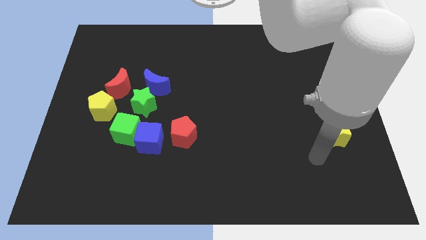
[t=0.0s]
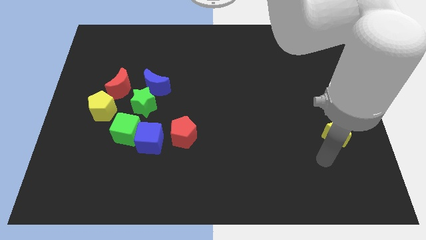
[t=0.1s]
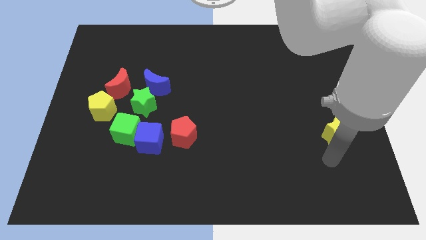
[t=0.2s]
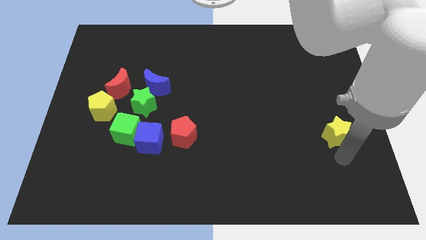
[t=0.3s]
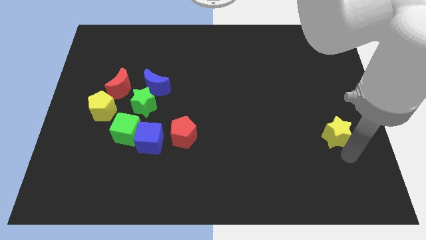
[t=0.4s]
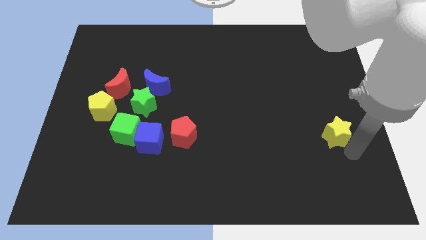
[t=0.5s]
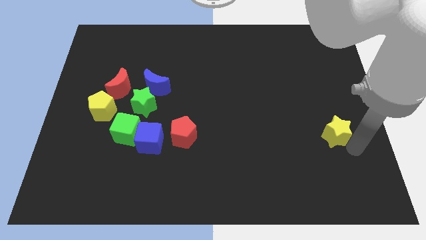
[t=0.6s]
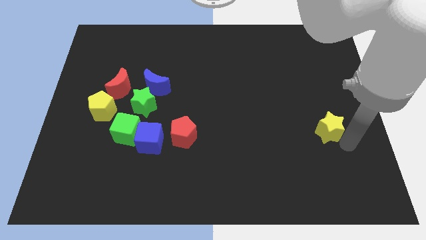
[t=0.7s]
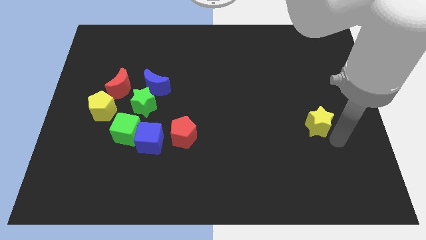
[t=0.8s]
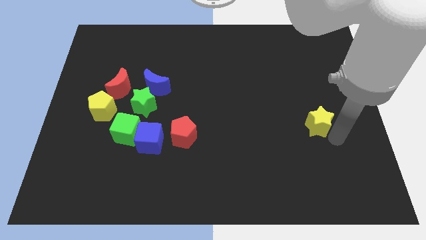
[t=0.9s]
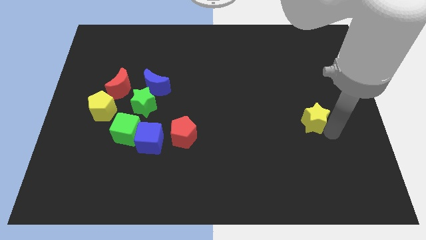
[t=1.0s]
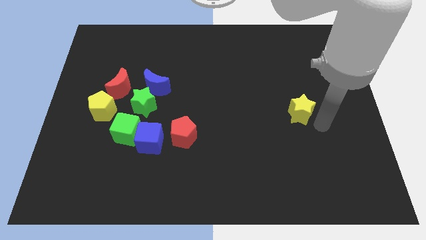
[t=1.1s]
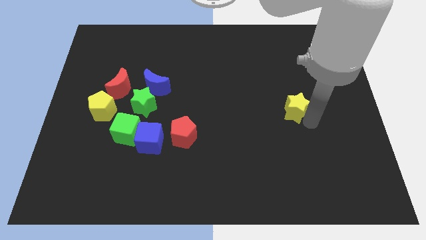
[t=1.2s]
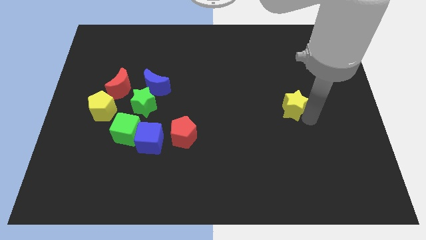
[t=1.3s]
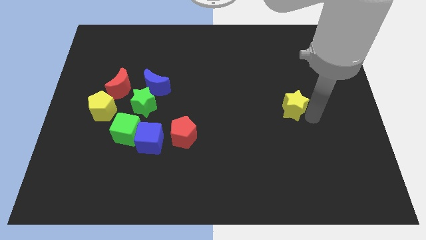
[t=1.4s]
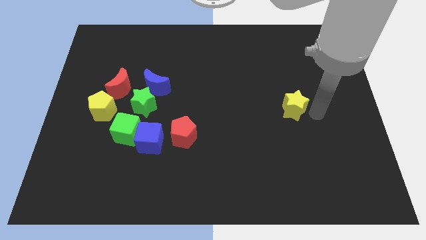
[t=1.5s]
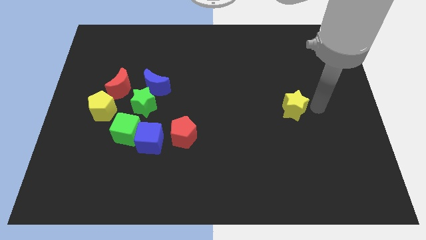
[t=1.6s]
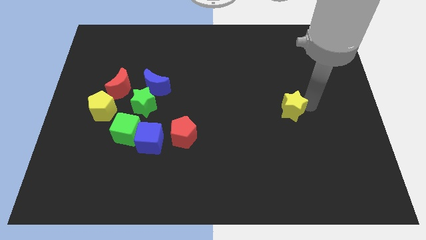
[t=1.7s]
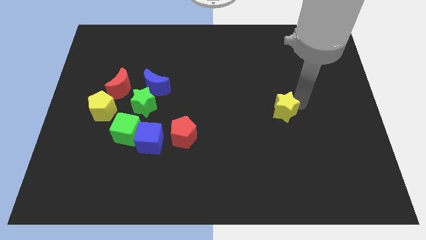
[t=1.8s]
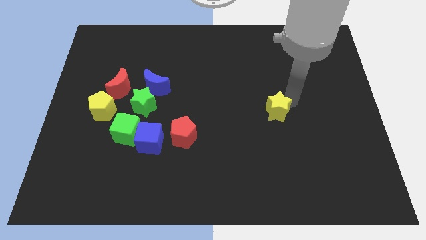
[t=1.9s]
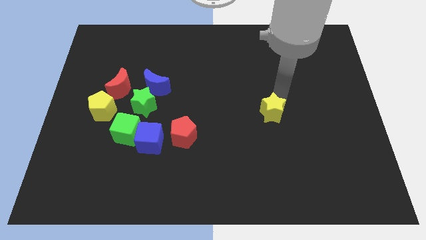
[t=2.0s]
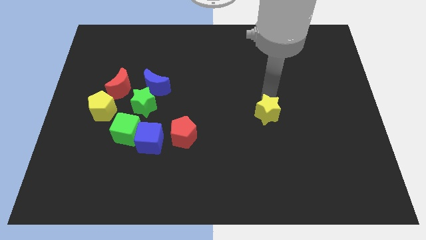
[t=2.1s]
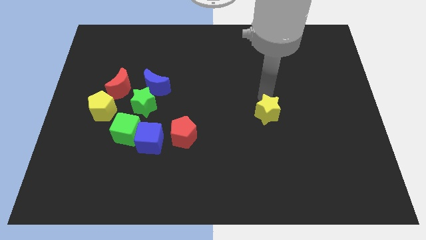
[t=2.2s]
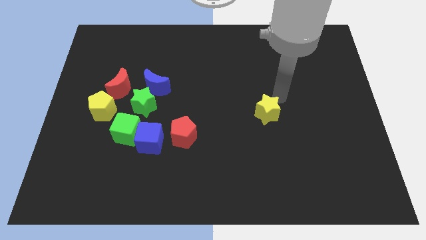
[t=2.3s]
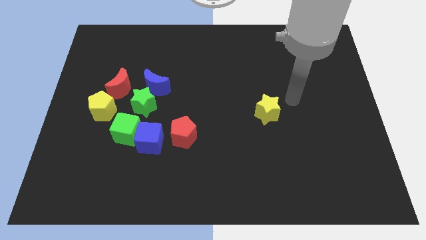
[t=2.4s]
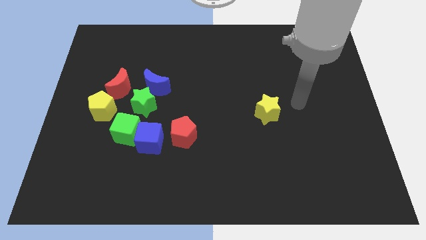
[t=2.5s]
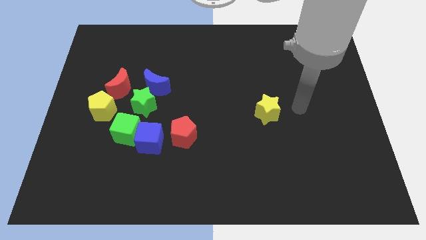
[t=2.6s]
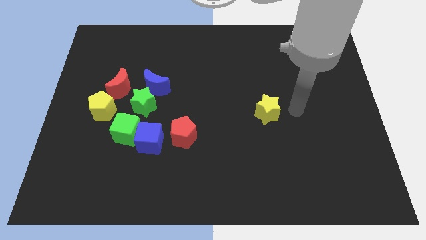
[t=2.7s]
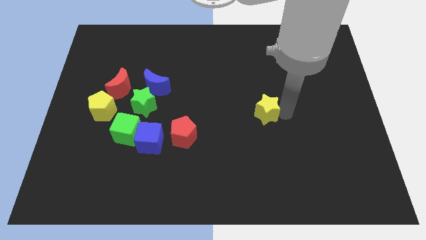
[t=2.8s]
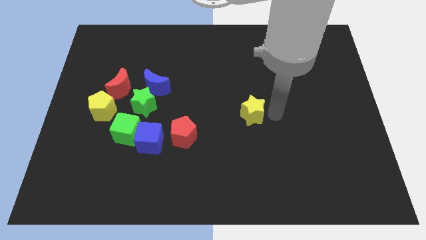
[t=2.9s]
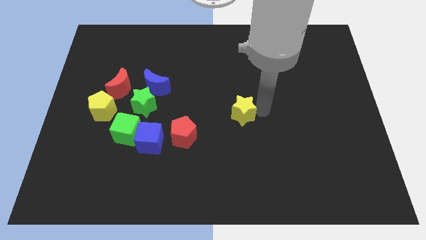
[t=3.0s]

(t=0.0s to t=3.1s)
move yellow star towards center

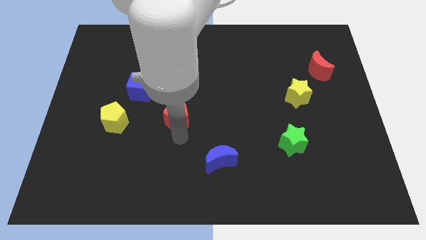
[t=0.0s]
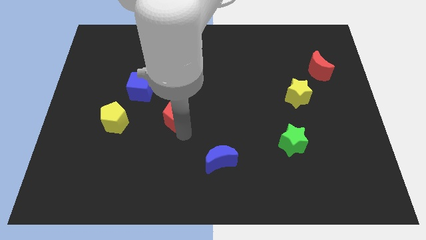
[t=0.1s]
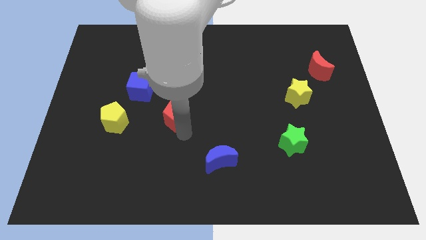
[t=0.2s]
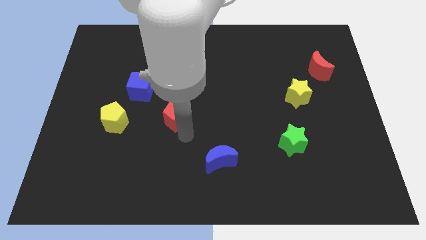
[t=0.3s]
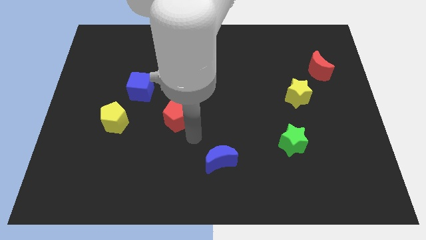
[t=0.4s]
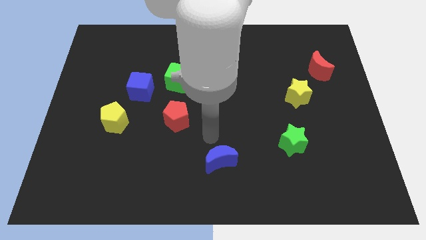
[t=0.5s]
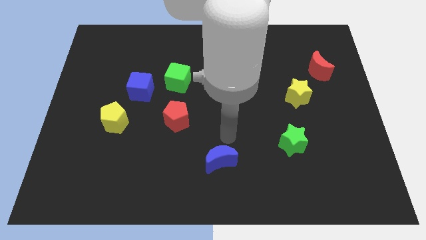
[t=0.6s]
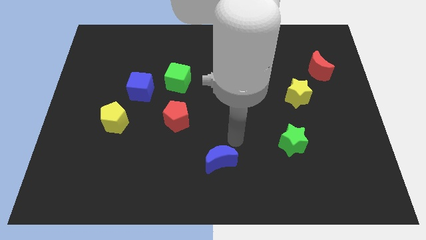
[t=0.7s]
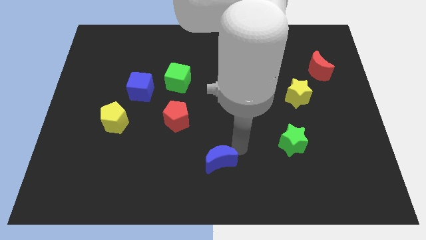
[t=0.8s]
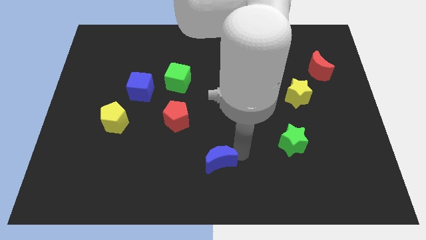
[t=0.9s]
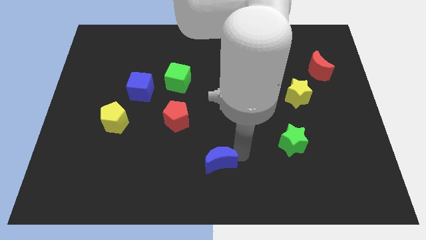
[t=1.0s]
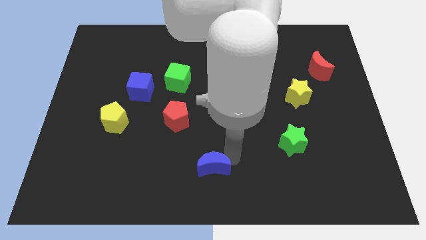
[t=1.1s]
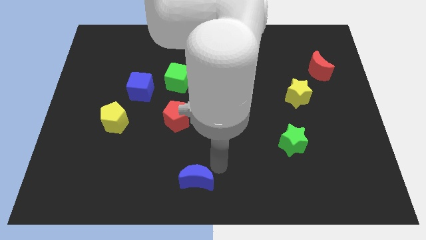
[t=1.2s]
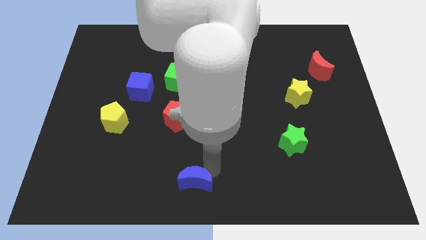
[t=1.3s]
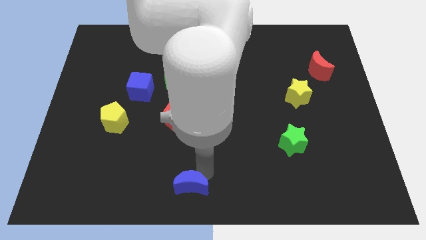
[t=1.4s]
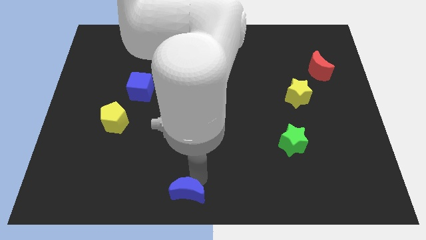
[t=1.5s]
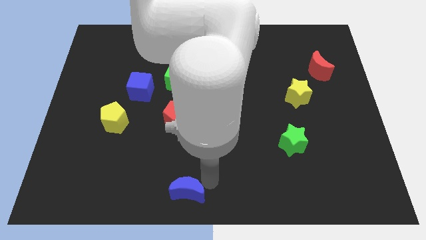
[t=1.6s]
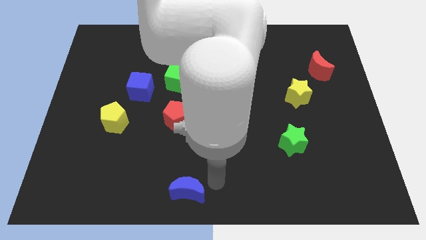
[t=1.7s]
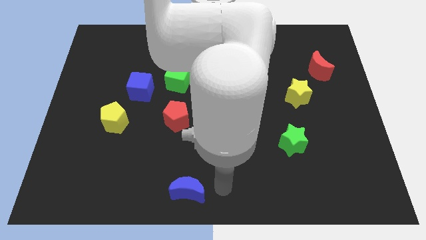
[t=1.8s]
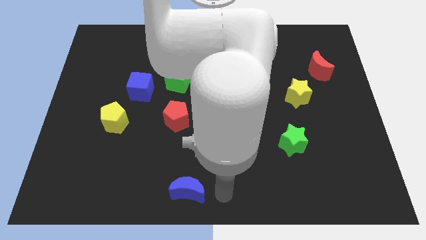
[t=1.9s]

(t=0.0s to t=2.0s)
place the blue crescent at the bottom center

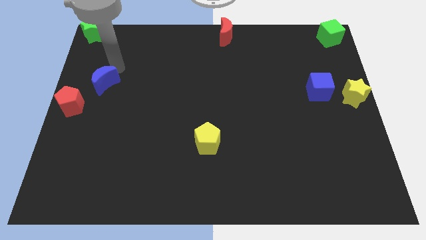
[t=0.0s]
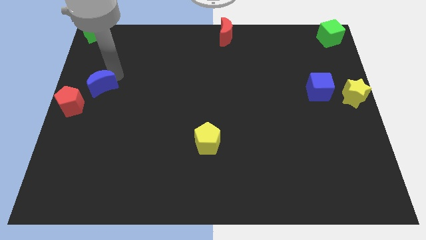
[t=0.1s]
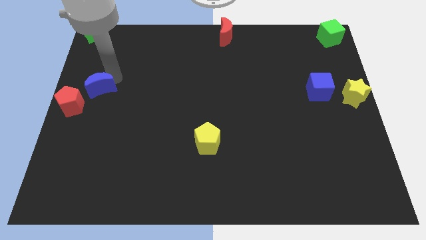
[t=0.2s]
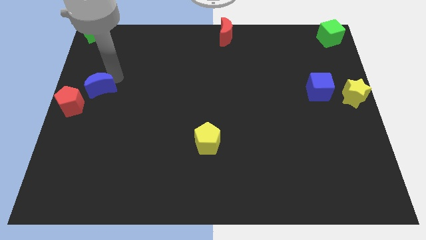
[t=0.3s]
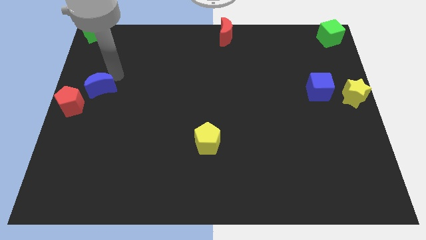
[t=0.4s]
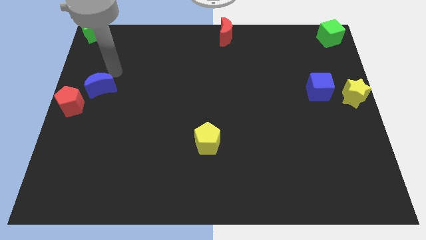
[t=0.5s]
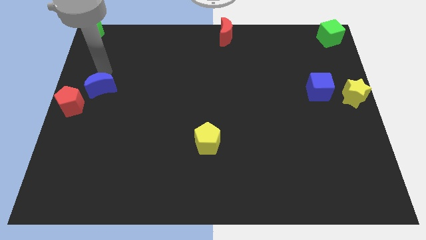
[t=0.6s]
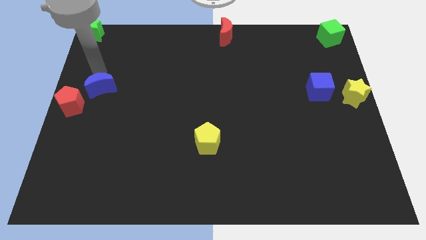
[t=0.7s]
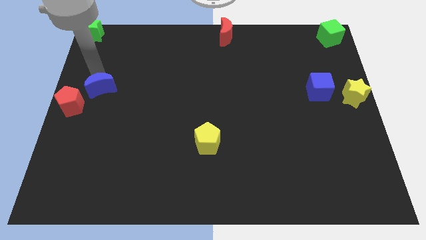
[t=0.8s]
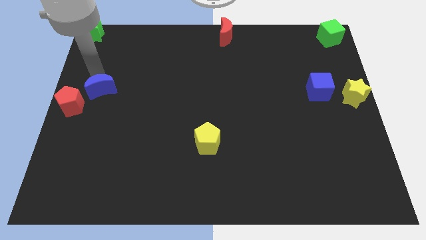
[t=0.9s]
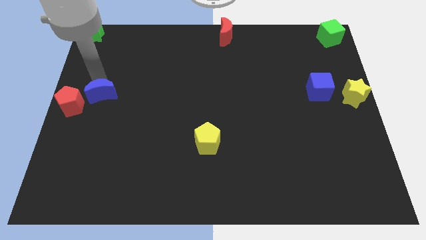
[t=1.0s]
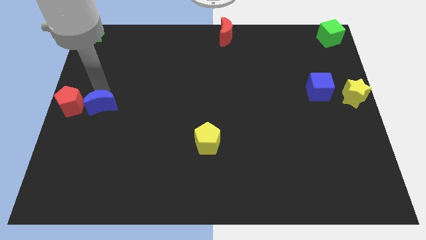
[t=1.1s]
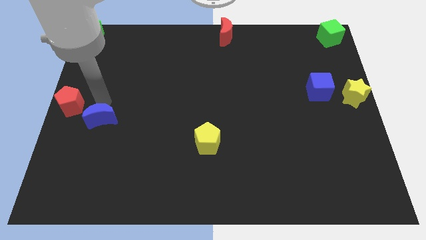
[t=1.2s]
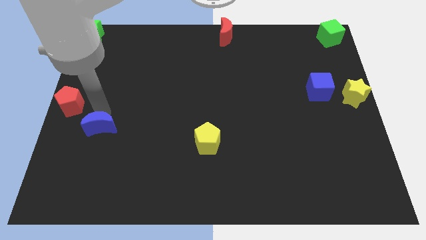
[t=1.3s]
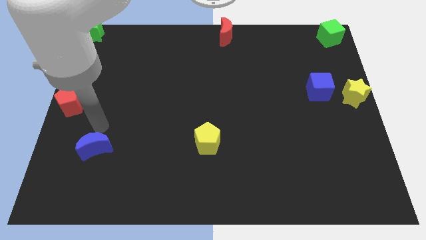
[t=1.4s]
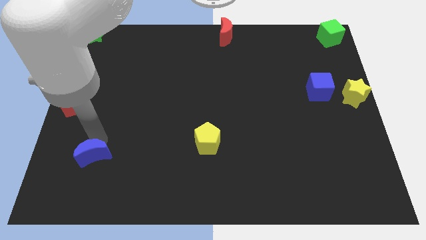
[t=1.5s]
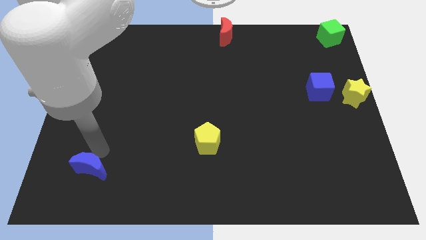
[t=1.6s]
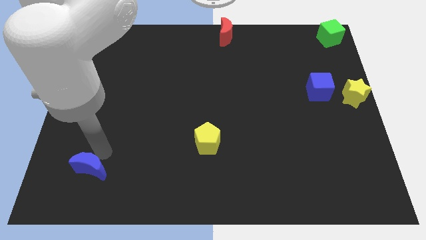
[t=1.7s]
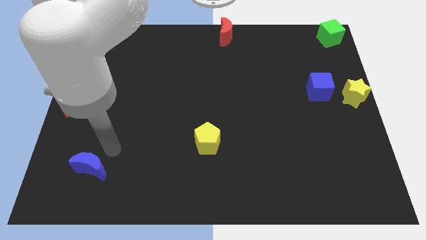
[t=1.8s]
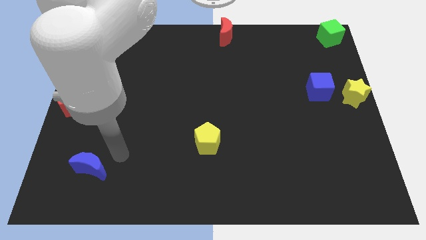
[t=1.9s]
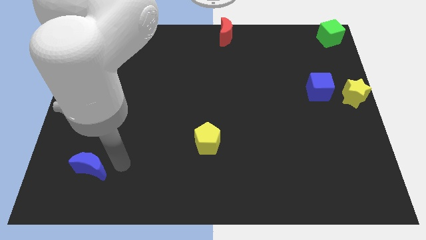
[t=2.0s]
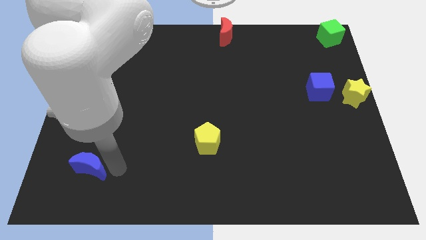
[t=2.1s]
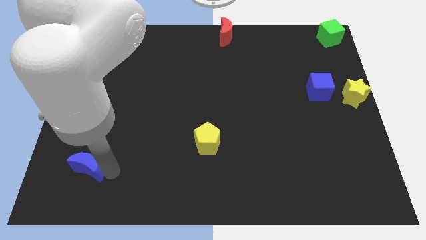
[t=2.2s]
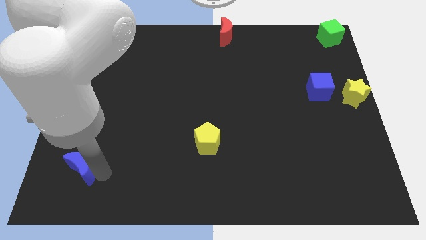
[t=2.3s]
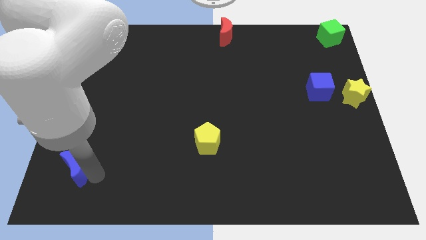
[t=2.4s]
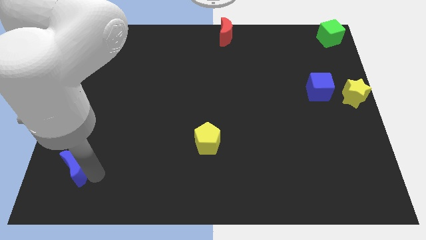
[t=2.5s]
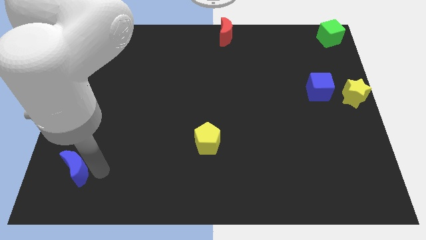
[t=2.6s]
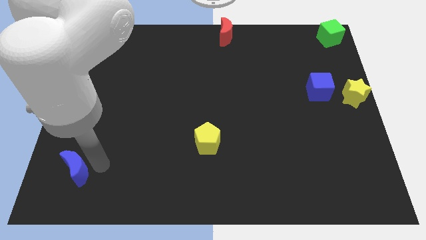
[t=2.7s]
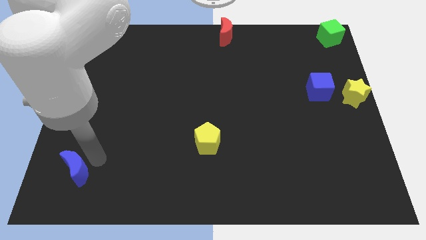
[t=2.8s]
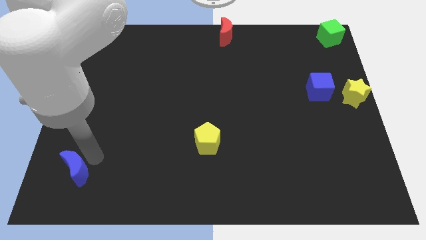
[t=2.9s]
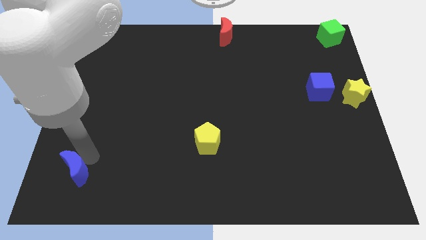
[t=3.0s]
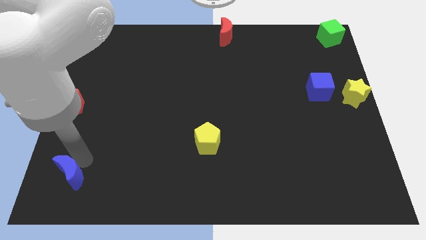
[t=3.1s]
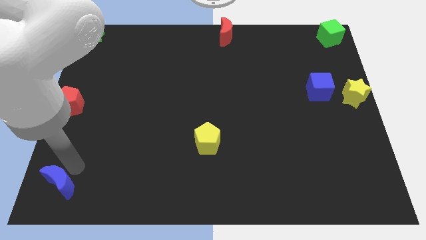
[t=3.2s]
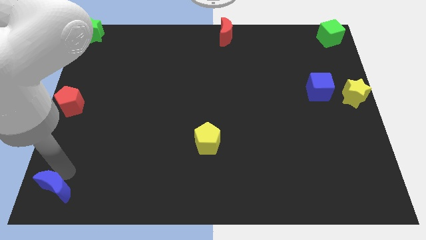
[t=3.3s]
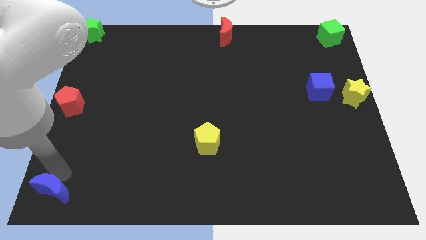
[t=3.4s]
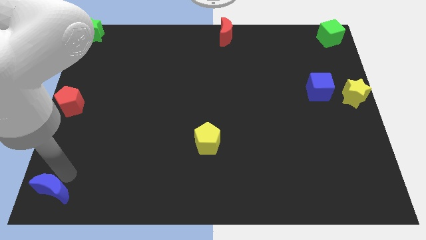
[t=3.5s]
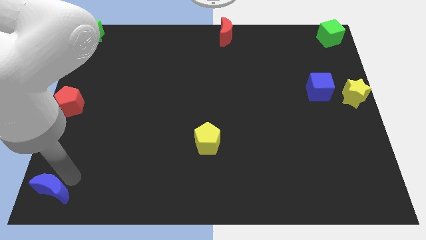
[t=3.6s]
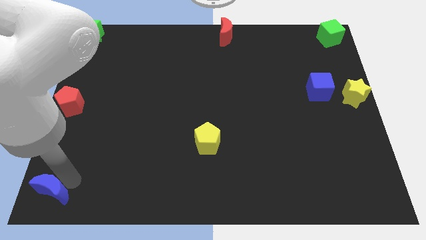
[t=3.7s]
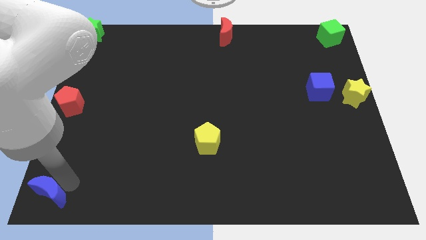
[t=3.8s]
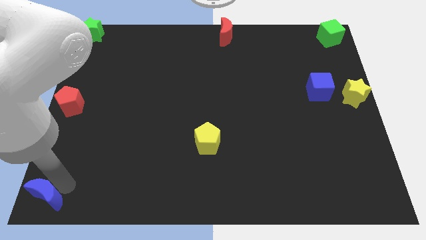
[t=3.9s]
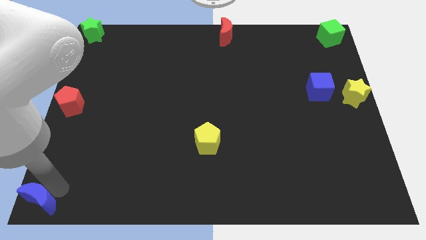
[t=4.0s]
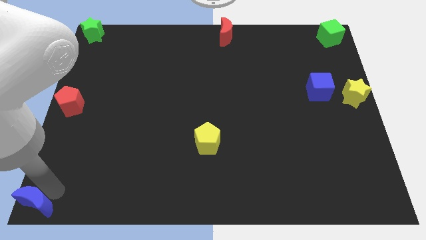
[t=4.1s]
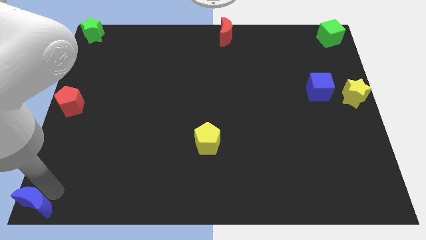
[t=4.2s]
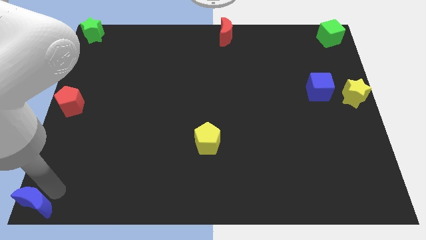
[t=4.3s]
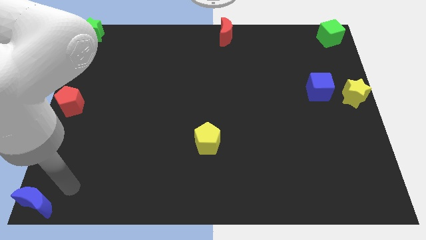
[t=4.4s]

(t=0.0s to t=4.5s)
move blue crescent to the bottom left corner of the board
